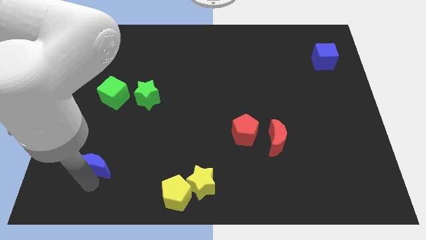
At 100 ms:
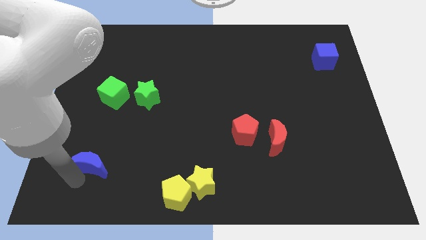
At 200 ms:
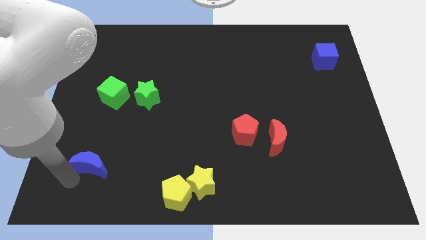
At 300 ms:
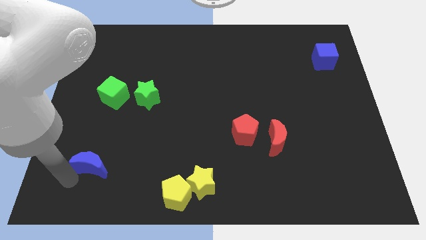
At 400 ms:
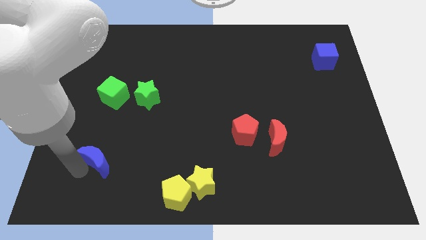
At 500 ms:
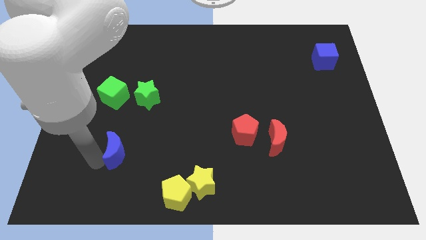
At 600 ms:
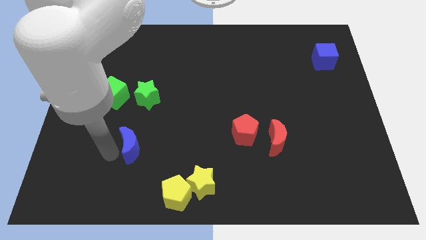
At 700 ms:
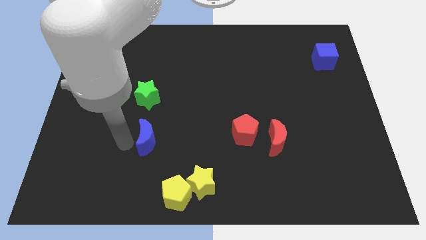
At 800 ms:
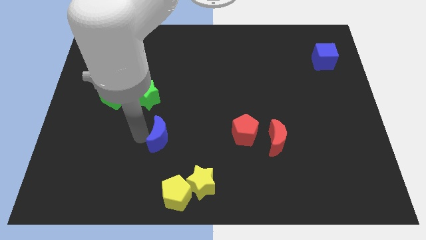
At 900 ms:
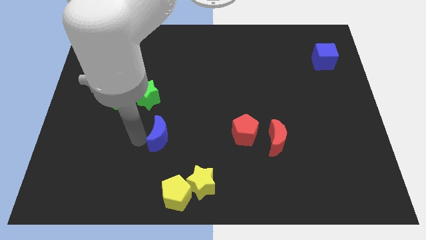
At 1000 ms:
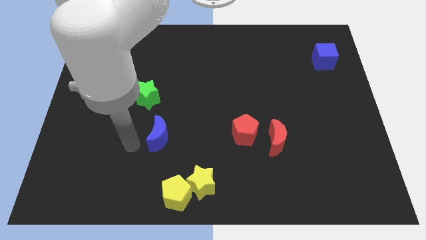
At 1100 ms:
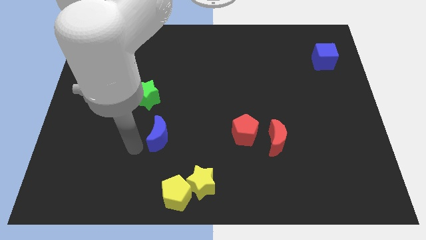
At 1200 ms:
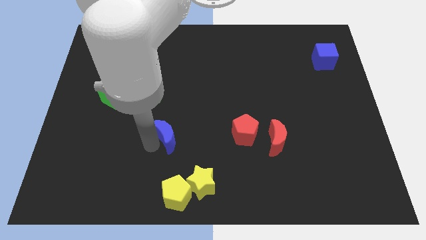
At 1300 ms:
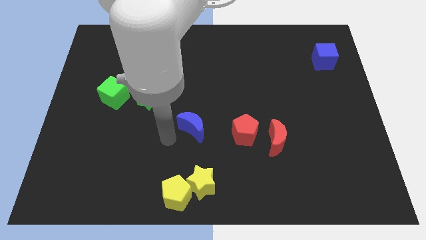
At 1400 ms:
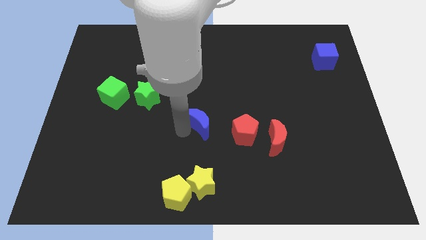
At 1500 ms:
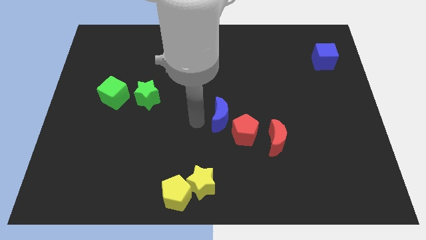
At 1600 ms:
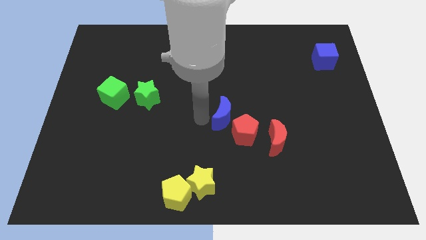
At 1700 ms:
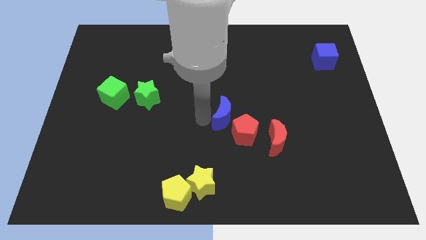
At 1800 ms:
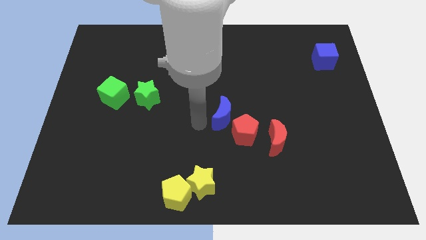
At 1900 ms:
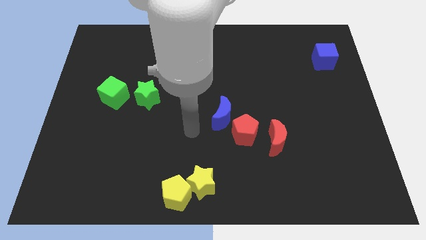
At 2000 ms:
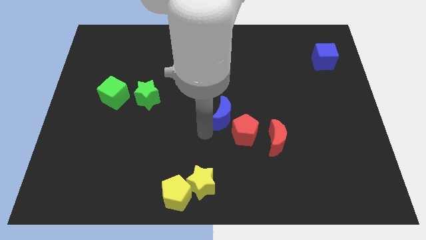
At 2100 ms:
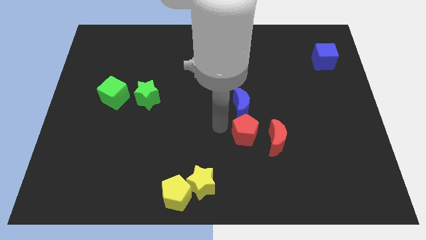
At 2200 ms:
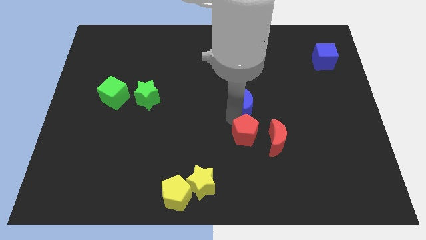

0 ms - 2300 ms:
place blue moon above red pentagon

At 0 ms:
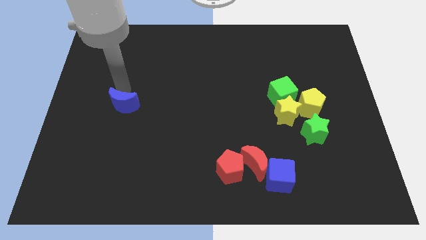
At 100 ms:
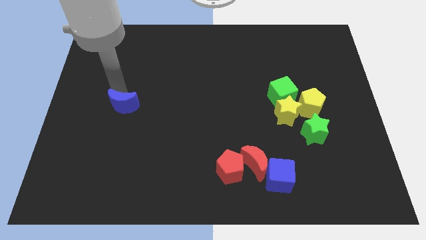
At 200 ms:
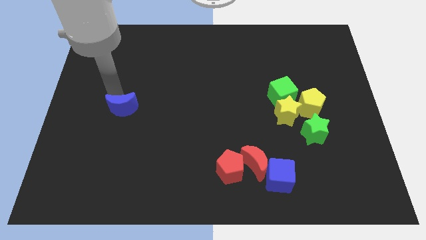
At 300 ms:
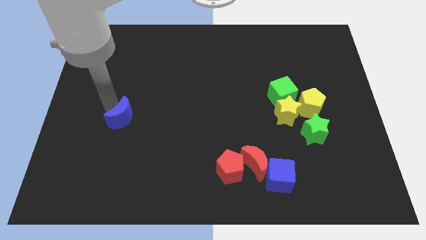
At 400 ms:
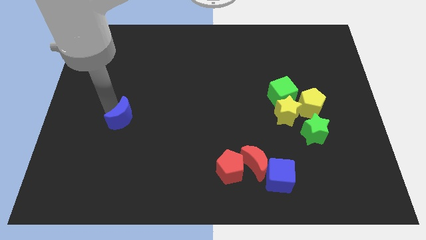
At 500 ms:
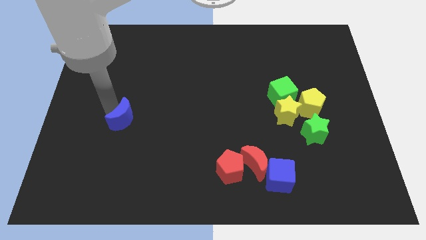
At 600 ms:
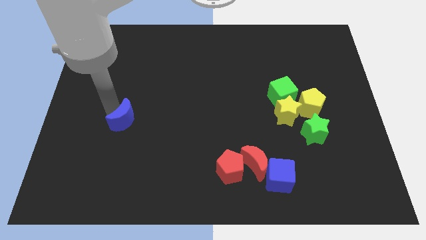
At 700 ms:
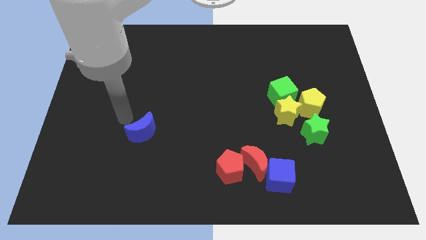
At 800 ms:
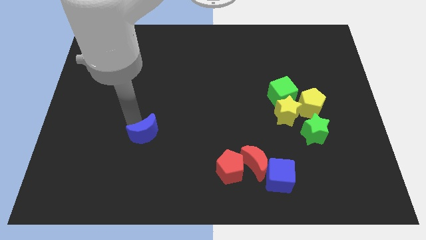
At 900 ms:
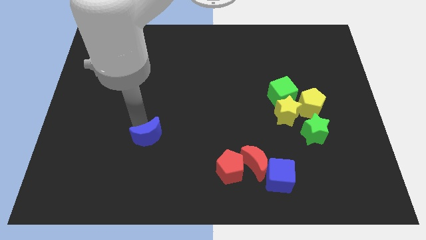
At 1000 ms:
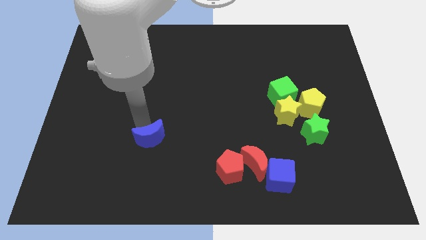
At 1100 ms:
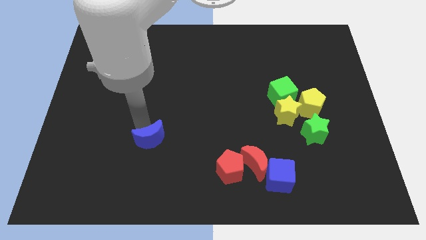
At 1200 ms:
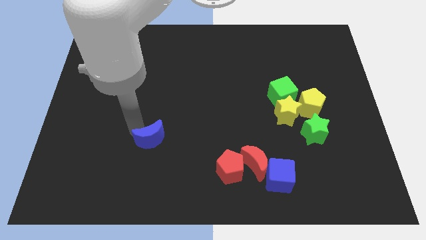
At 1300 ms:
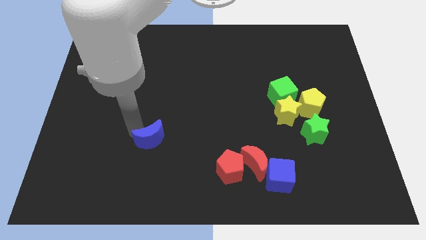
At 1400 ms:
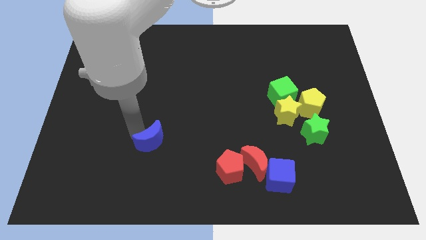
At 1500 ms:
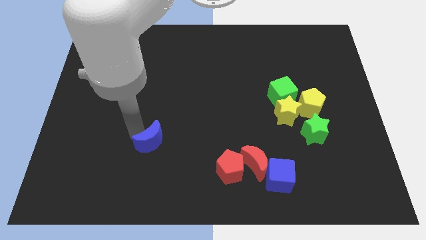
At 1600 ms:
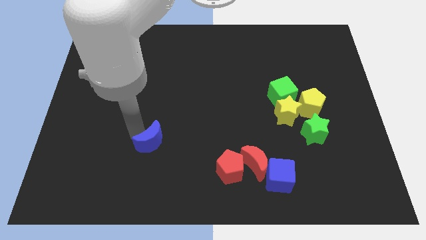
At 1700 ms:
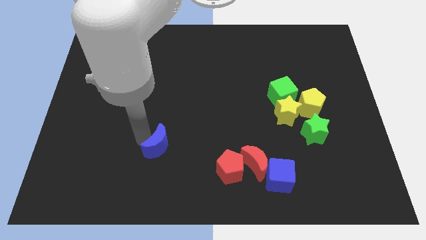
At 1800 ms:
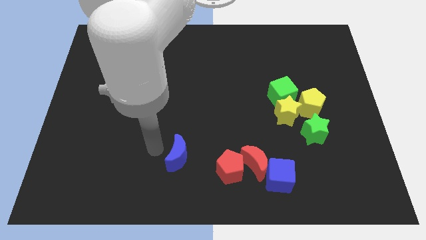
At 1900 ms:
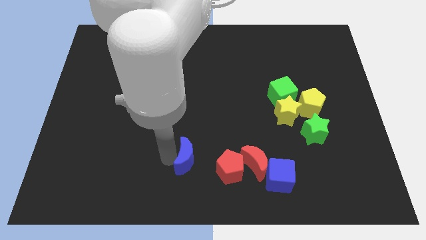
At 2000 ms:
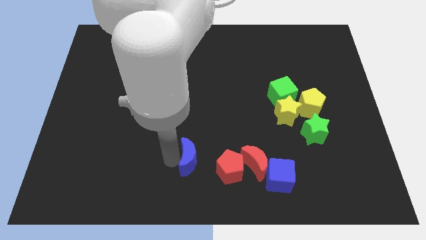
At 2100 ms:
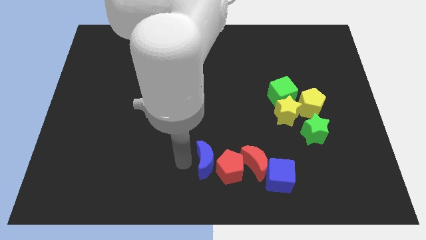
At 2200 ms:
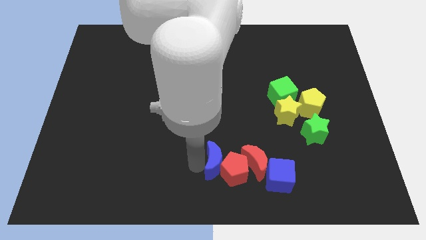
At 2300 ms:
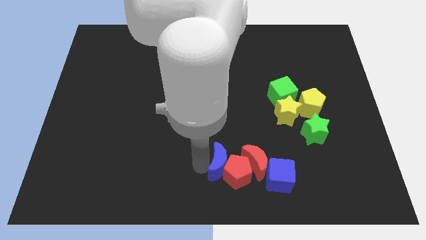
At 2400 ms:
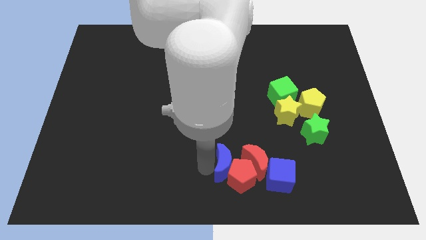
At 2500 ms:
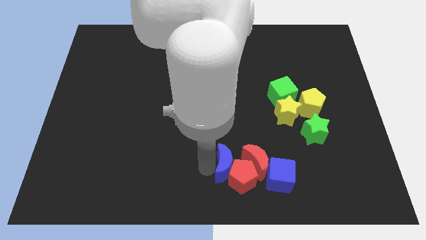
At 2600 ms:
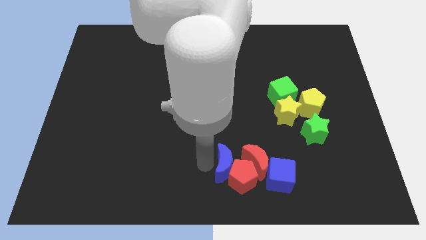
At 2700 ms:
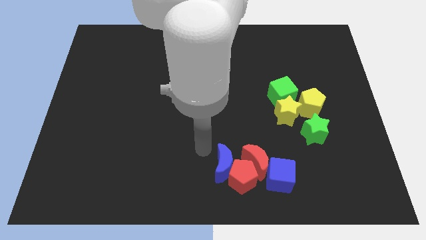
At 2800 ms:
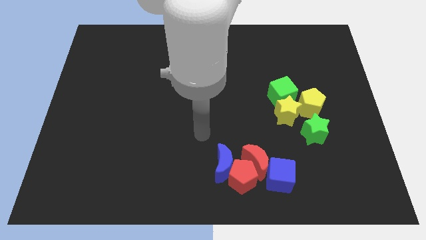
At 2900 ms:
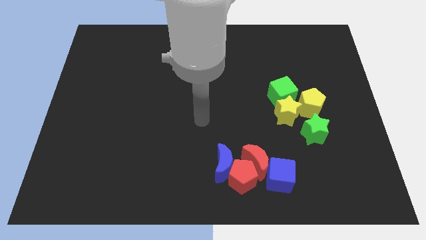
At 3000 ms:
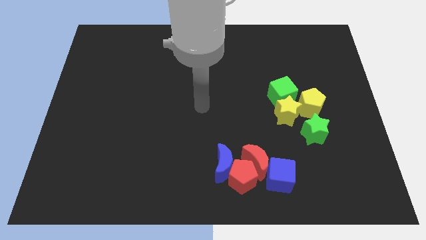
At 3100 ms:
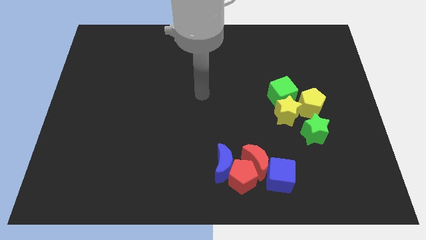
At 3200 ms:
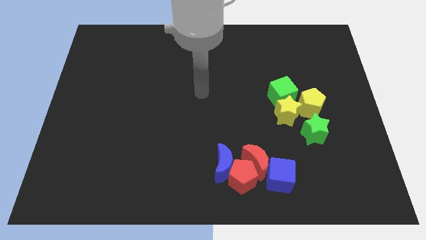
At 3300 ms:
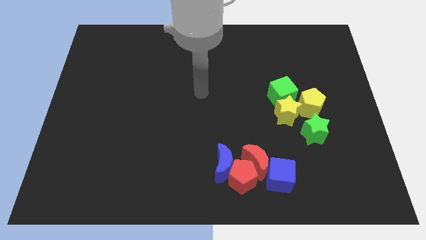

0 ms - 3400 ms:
push the blue moon towards the red blocks

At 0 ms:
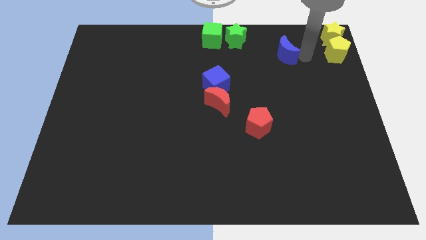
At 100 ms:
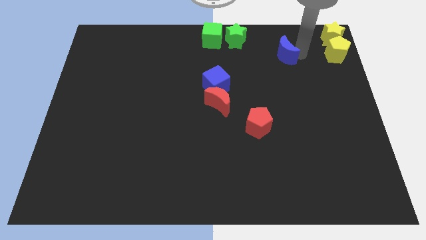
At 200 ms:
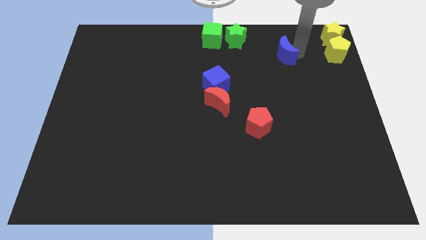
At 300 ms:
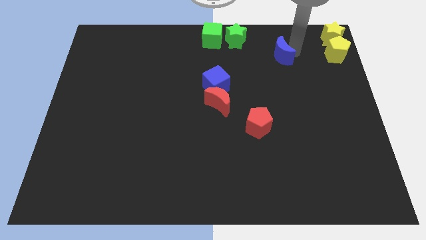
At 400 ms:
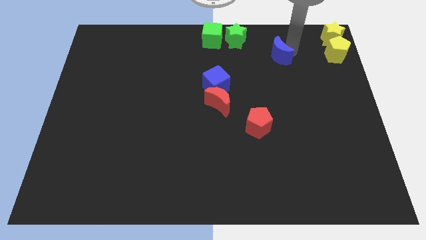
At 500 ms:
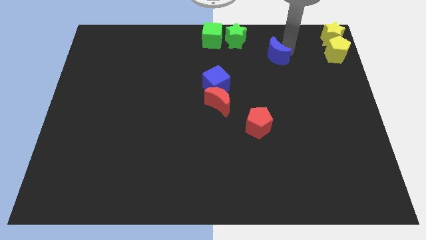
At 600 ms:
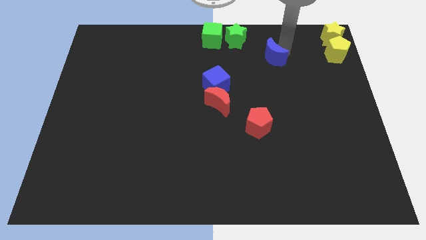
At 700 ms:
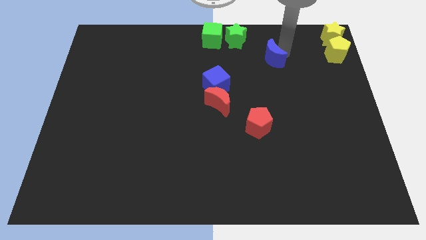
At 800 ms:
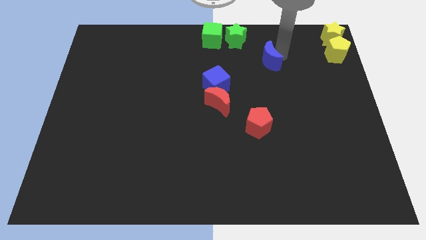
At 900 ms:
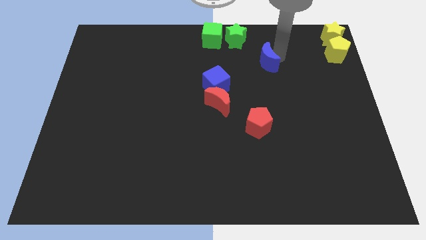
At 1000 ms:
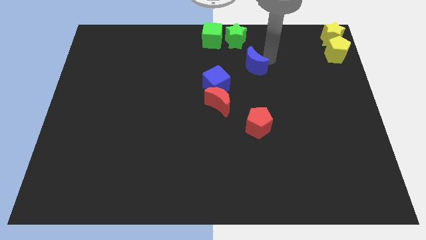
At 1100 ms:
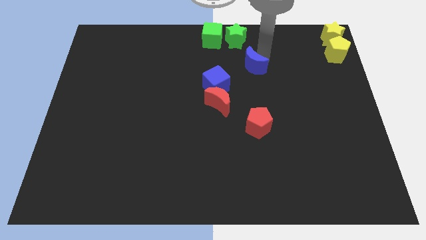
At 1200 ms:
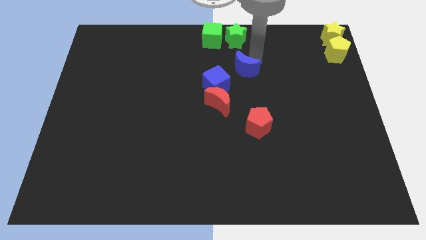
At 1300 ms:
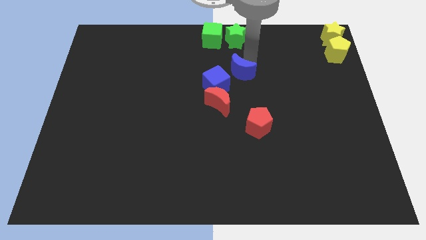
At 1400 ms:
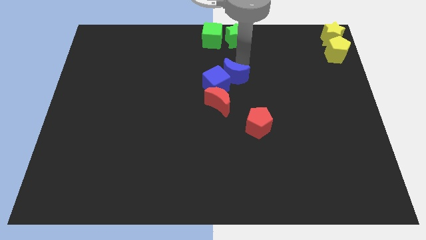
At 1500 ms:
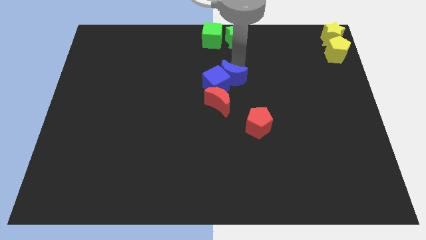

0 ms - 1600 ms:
move the blue moon to the bottom side of the green star

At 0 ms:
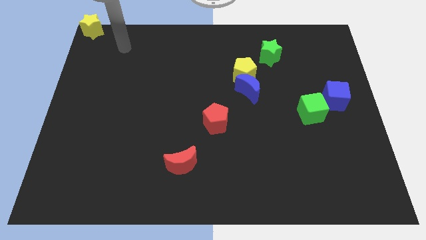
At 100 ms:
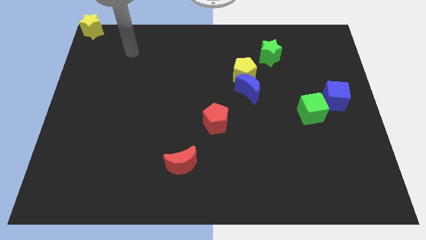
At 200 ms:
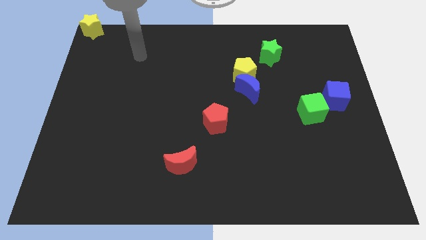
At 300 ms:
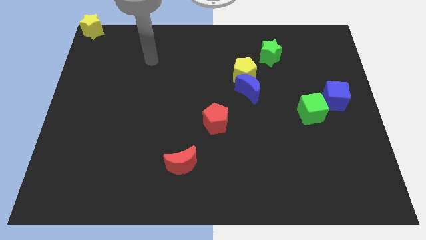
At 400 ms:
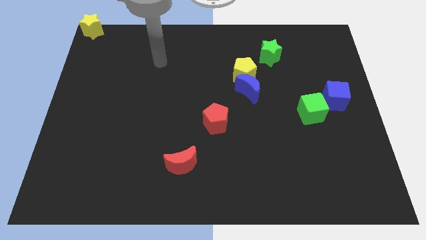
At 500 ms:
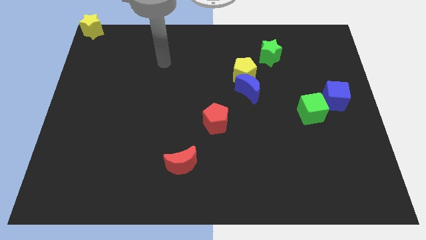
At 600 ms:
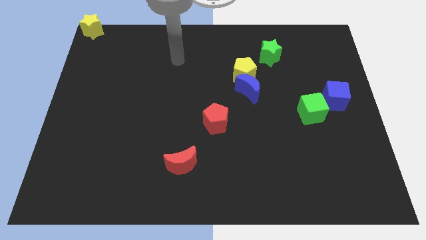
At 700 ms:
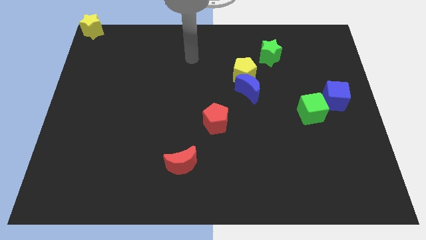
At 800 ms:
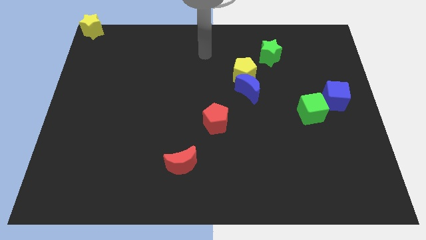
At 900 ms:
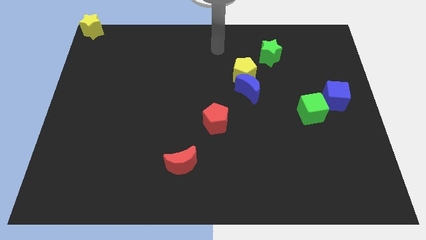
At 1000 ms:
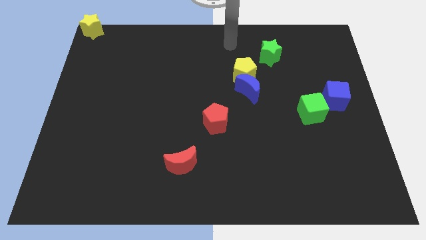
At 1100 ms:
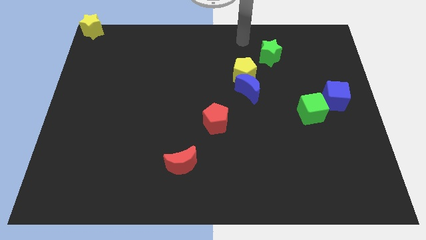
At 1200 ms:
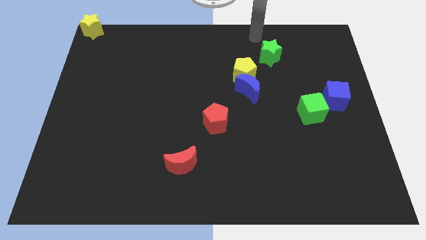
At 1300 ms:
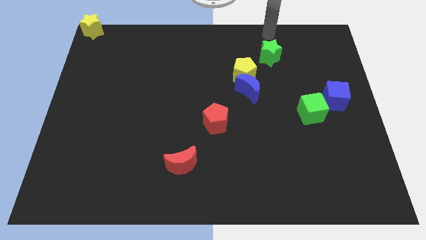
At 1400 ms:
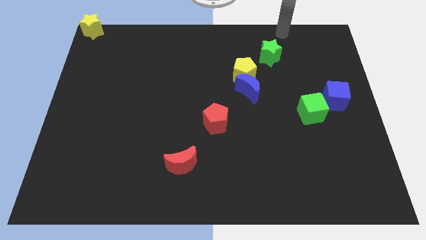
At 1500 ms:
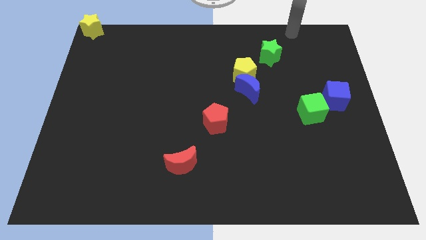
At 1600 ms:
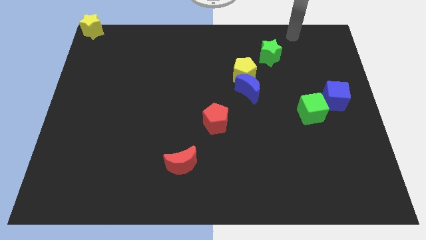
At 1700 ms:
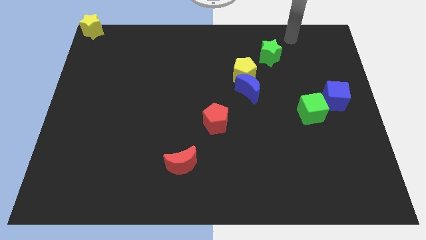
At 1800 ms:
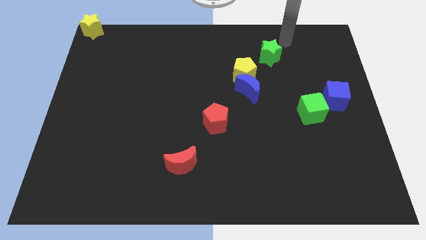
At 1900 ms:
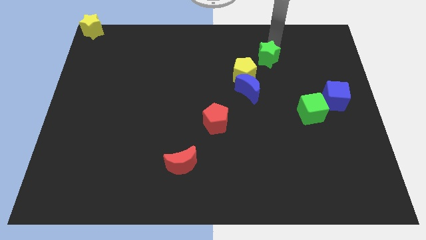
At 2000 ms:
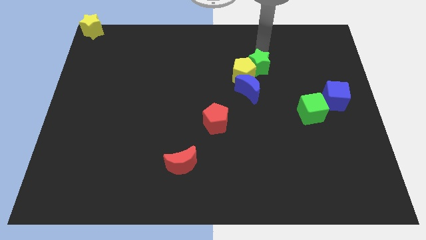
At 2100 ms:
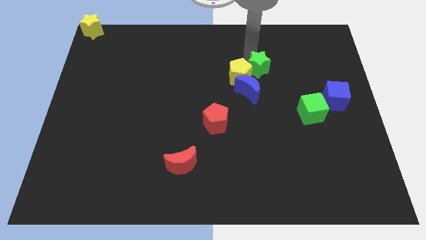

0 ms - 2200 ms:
push the green star into yellow yellow pentagon
